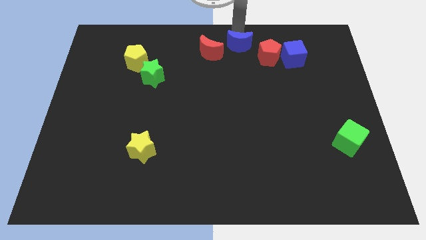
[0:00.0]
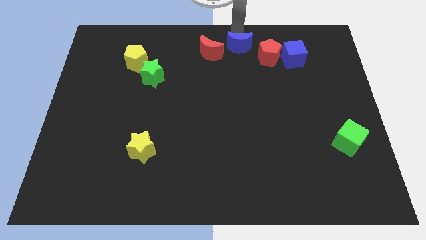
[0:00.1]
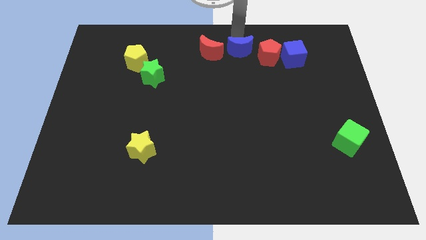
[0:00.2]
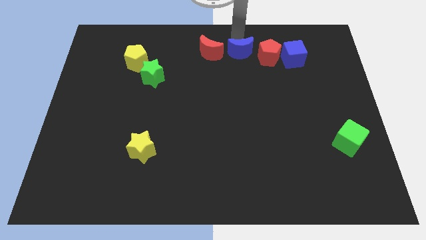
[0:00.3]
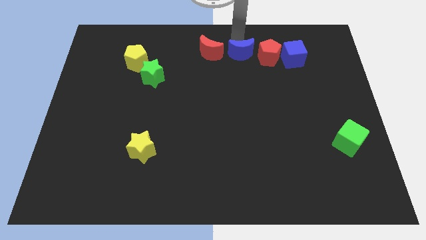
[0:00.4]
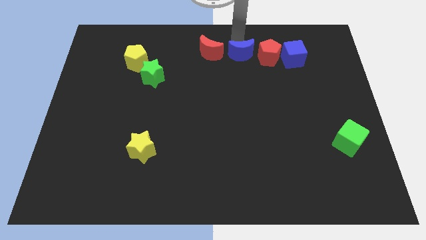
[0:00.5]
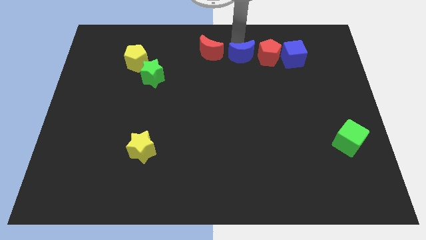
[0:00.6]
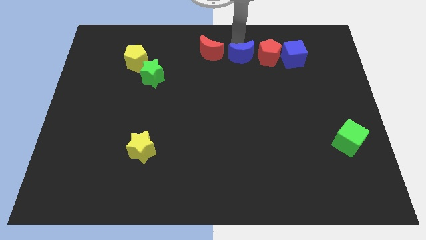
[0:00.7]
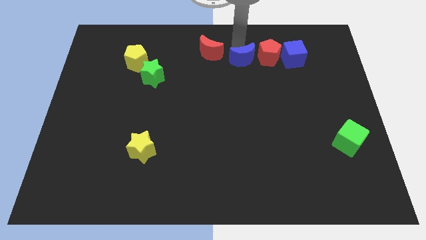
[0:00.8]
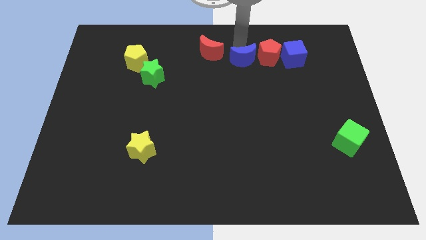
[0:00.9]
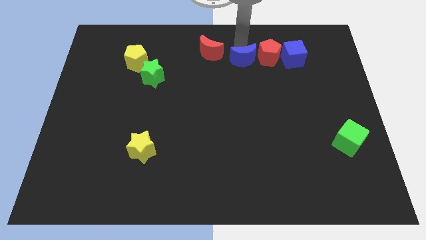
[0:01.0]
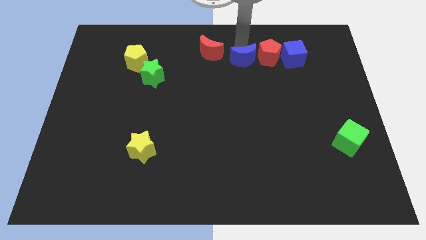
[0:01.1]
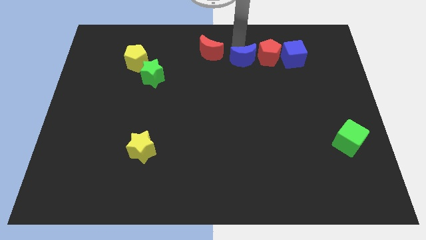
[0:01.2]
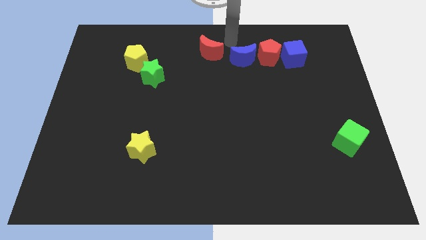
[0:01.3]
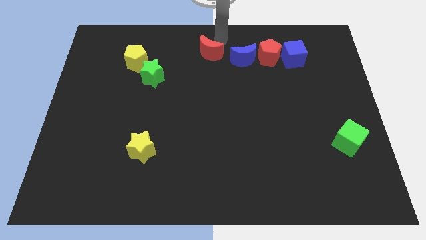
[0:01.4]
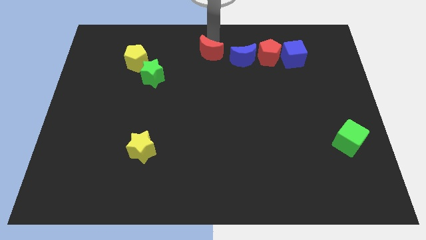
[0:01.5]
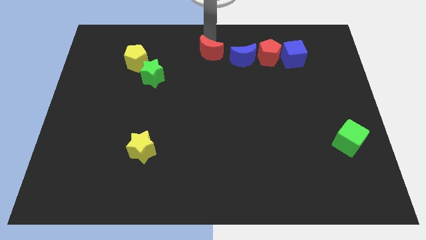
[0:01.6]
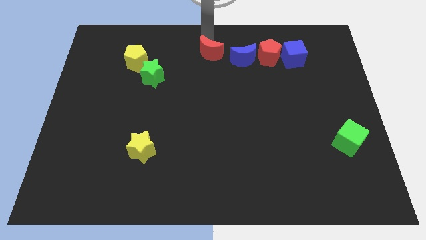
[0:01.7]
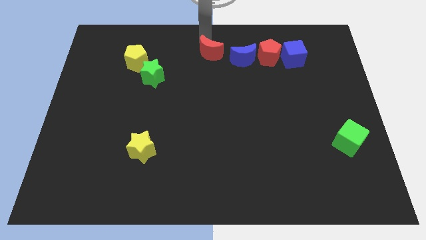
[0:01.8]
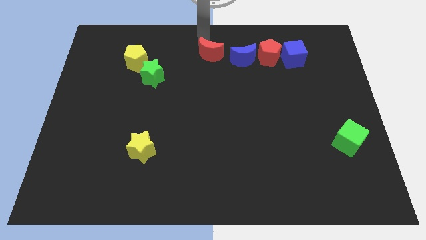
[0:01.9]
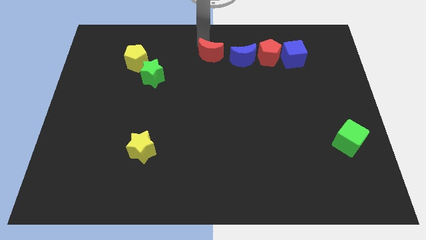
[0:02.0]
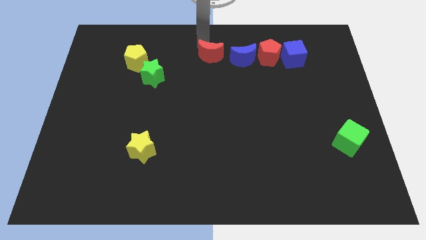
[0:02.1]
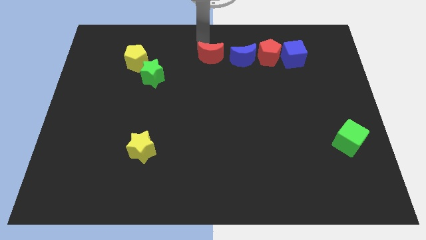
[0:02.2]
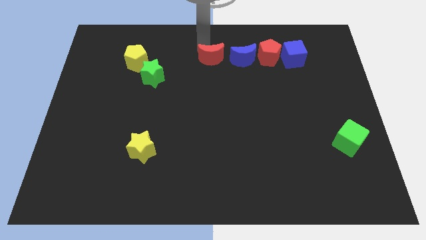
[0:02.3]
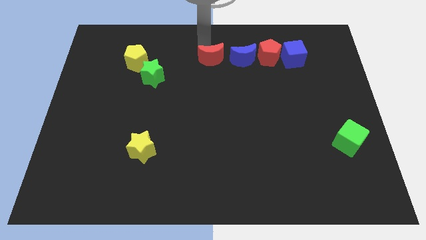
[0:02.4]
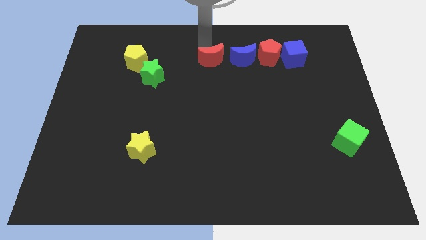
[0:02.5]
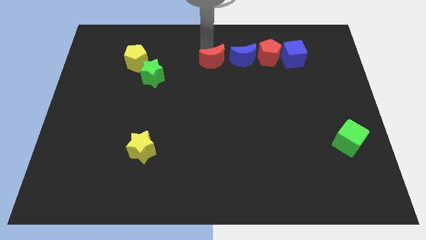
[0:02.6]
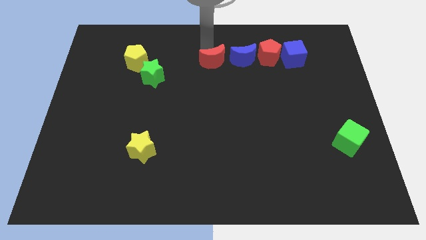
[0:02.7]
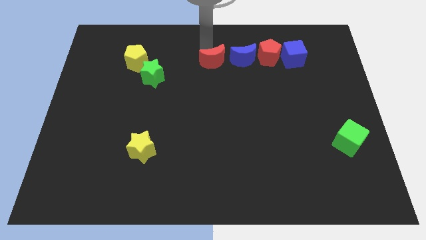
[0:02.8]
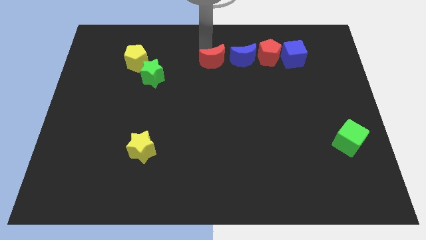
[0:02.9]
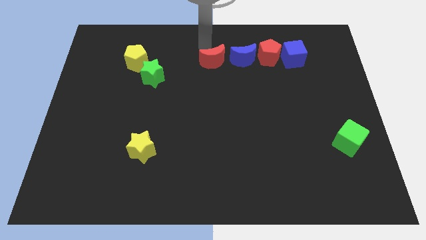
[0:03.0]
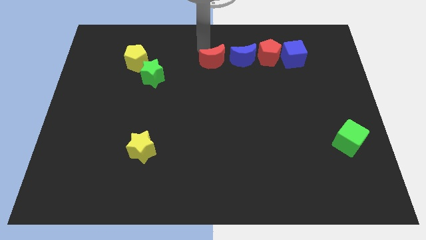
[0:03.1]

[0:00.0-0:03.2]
make a horizontal line with blue cube red pentagon blue moon and red moon

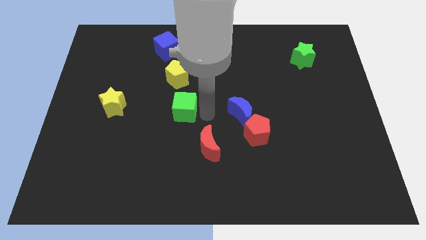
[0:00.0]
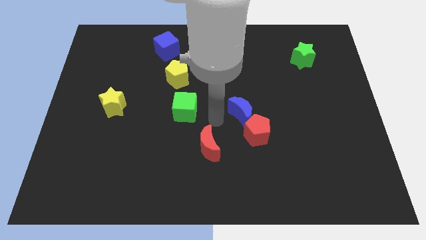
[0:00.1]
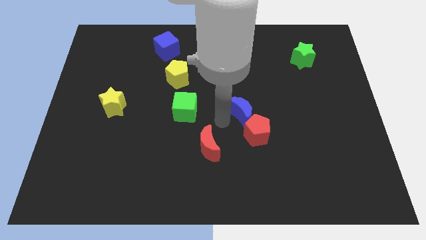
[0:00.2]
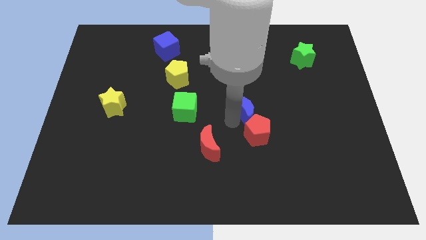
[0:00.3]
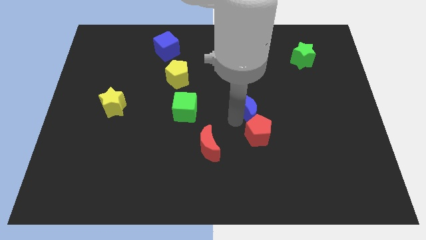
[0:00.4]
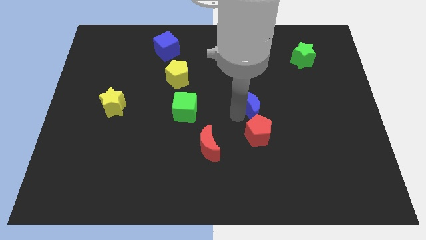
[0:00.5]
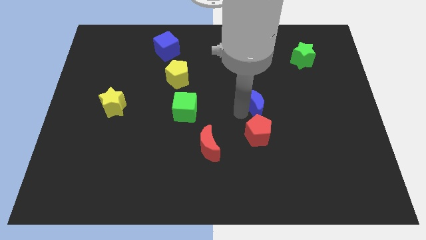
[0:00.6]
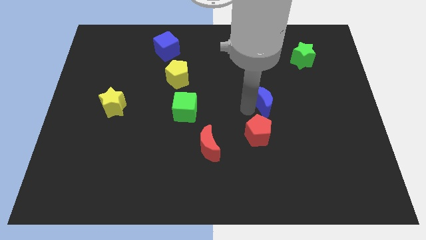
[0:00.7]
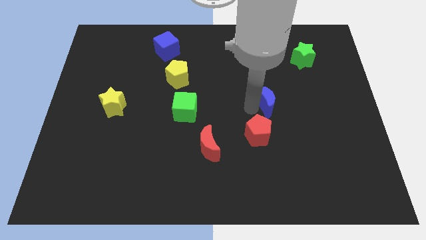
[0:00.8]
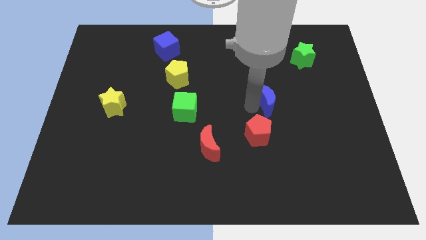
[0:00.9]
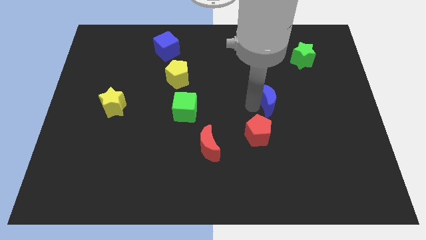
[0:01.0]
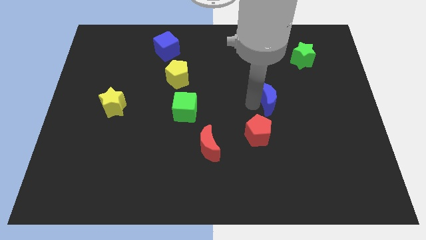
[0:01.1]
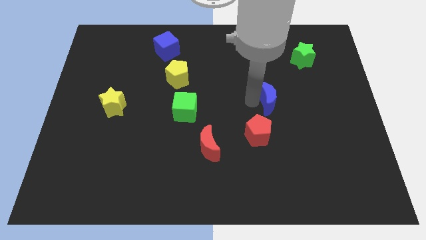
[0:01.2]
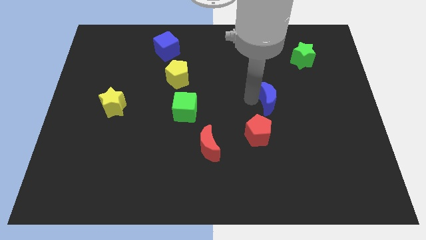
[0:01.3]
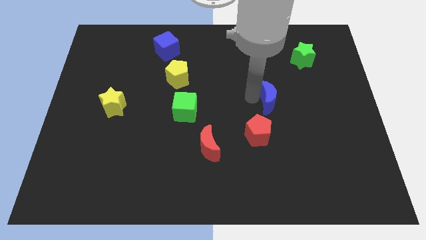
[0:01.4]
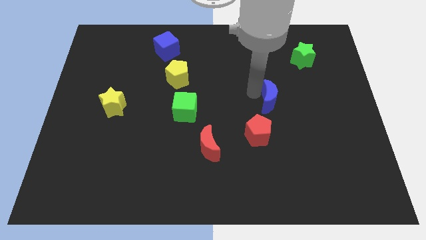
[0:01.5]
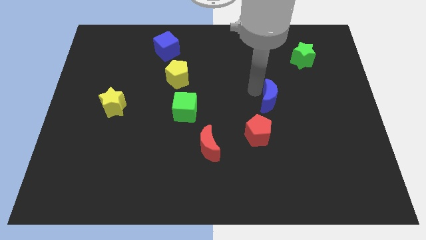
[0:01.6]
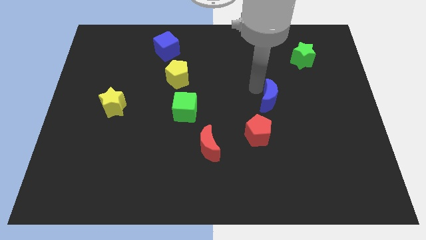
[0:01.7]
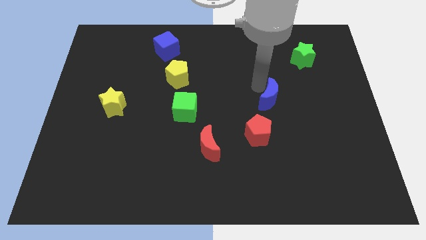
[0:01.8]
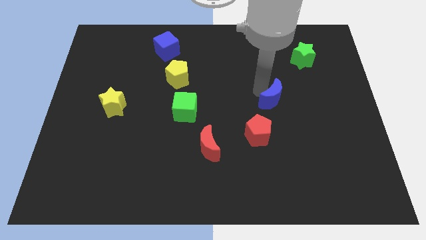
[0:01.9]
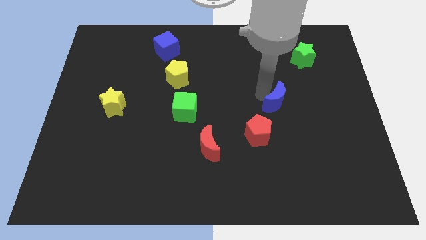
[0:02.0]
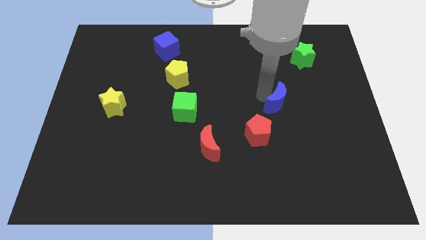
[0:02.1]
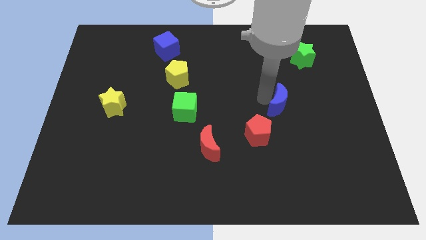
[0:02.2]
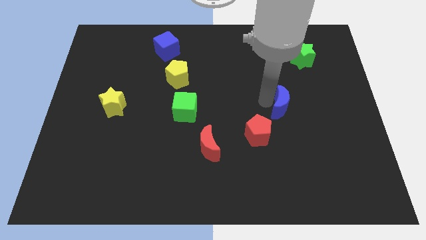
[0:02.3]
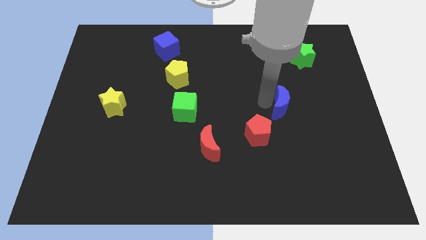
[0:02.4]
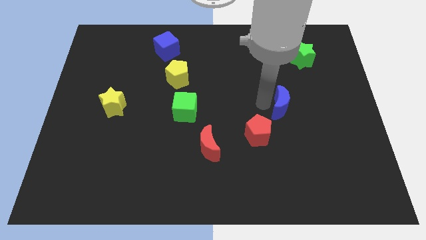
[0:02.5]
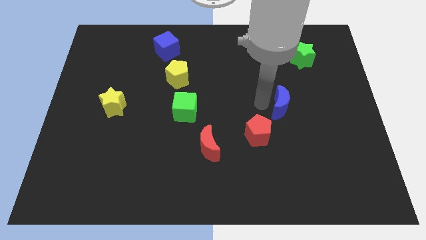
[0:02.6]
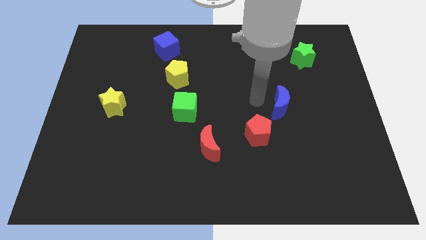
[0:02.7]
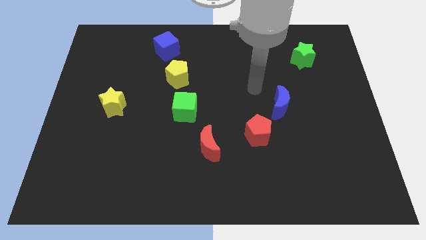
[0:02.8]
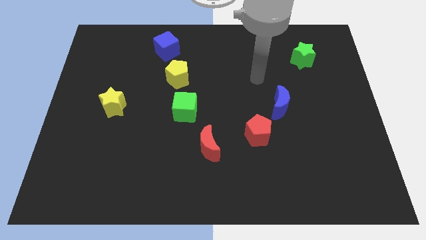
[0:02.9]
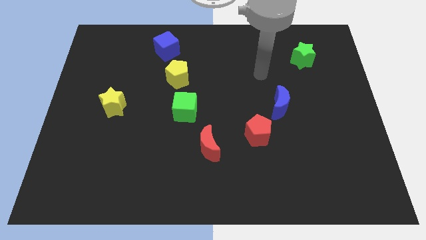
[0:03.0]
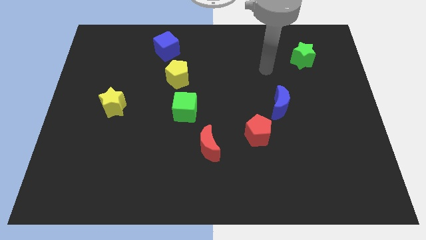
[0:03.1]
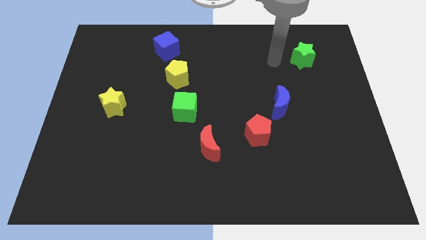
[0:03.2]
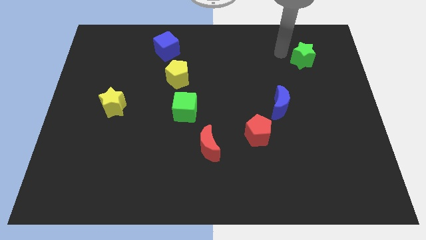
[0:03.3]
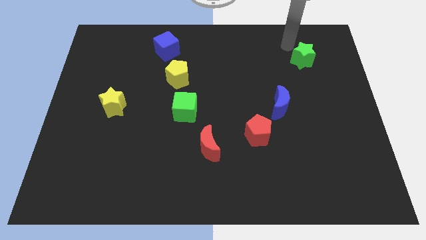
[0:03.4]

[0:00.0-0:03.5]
place the blue crescent in between the red pentagon and green star

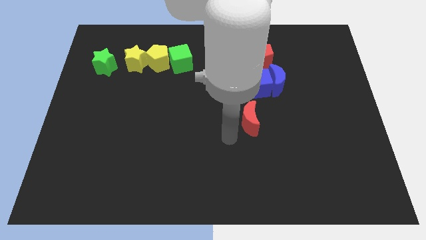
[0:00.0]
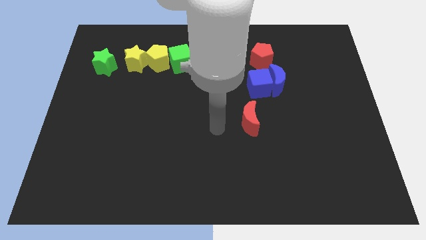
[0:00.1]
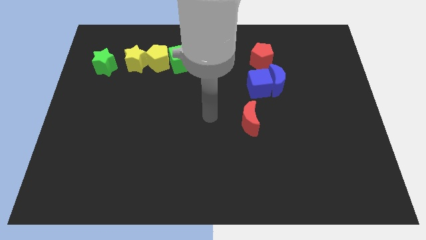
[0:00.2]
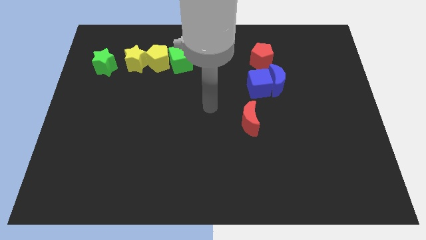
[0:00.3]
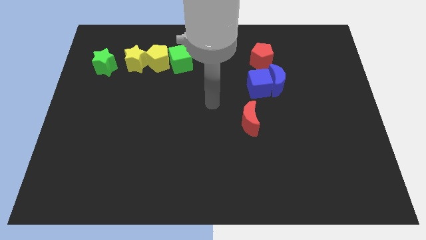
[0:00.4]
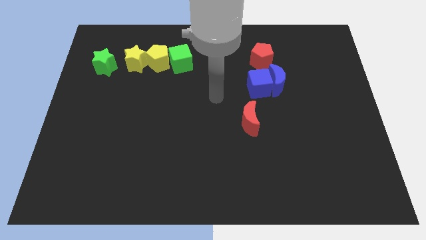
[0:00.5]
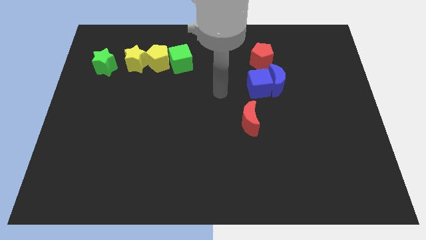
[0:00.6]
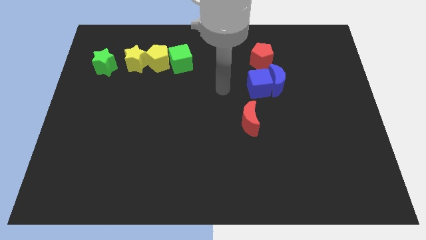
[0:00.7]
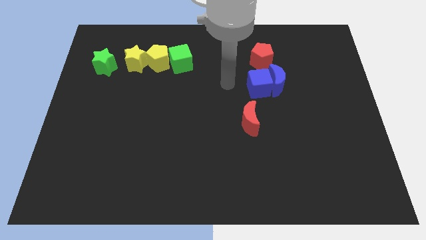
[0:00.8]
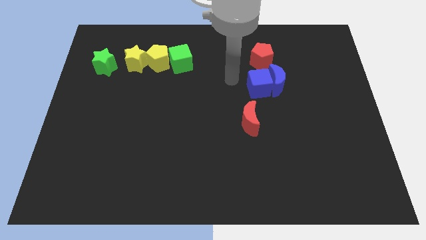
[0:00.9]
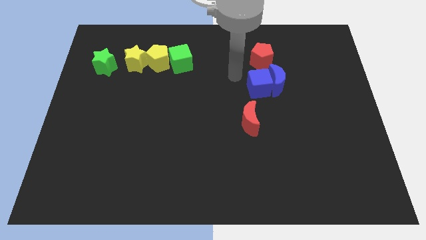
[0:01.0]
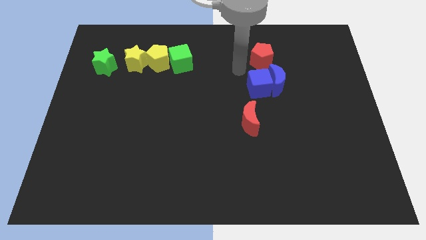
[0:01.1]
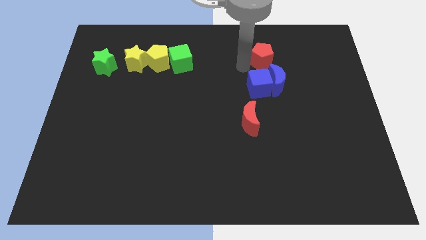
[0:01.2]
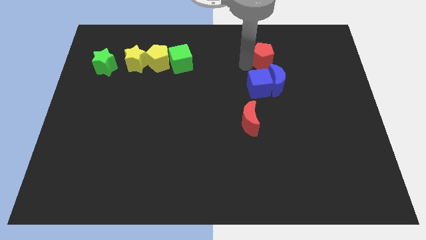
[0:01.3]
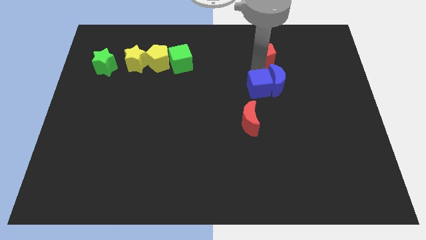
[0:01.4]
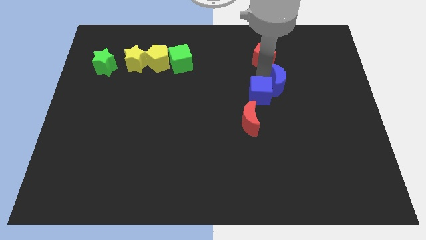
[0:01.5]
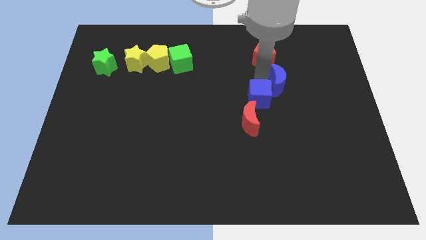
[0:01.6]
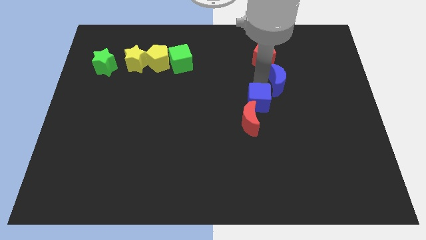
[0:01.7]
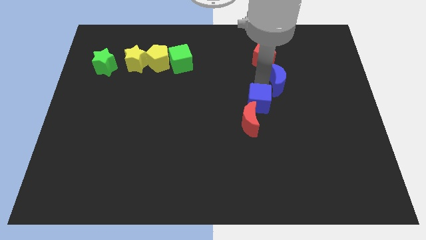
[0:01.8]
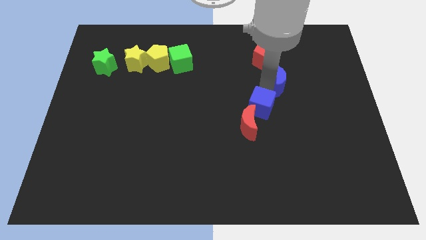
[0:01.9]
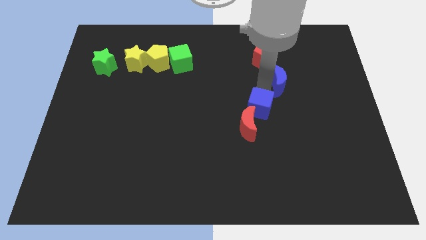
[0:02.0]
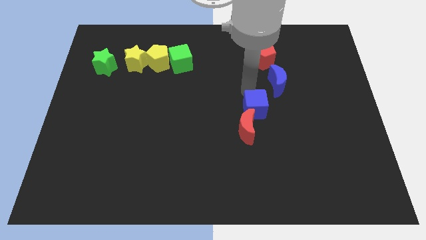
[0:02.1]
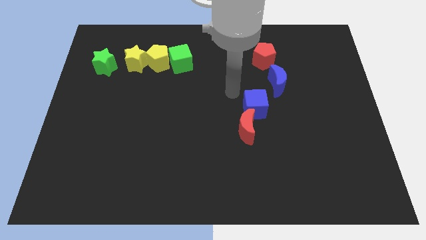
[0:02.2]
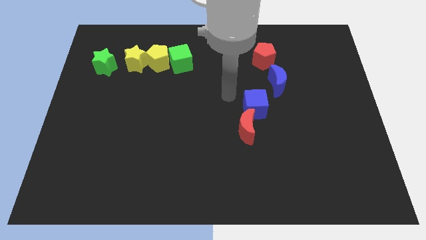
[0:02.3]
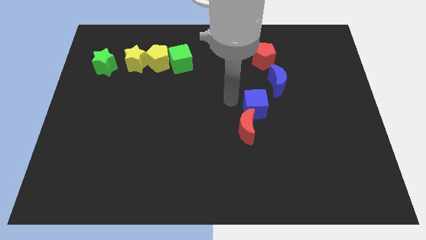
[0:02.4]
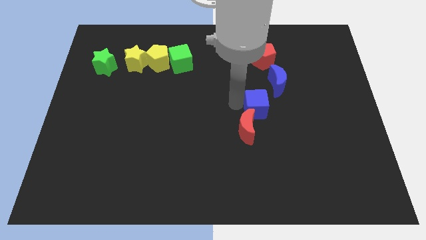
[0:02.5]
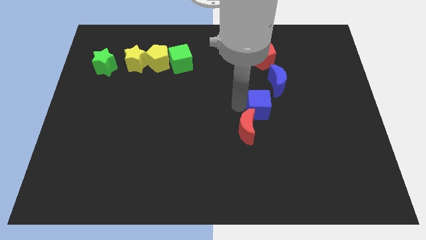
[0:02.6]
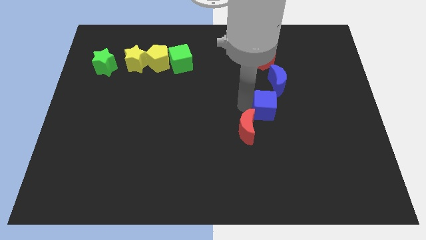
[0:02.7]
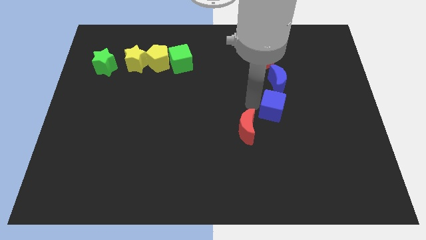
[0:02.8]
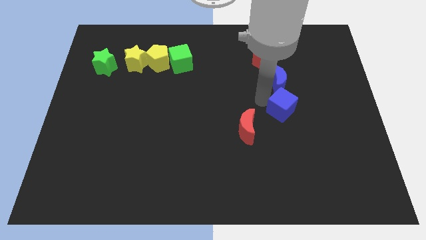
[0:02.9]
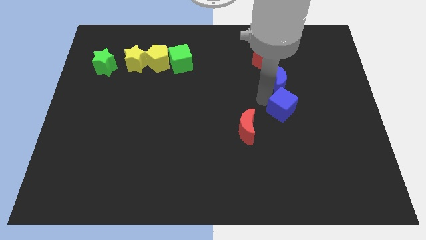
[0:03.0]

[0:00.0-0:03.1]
push the blue cube to the bottom of the blue crescent
